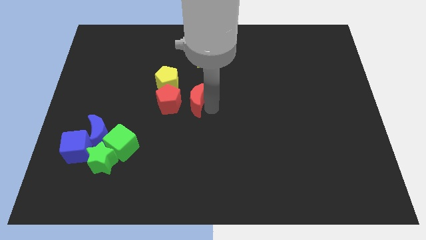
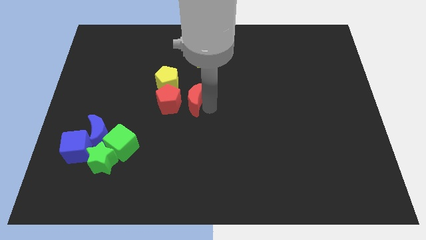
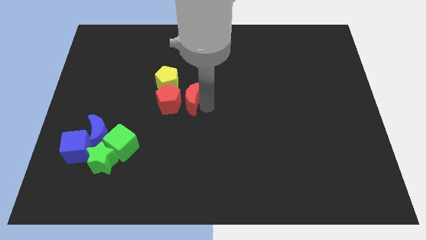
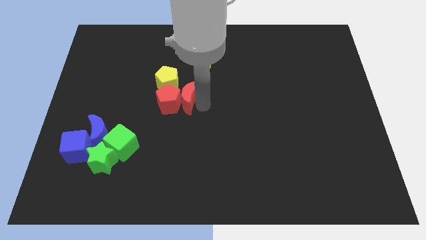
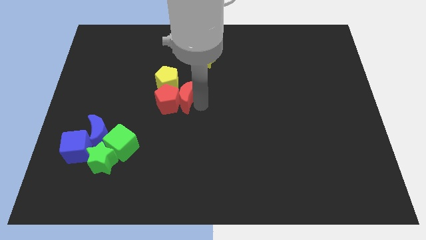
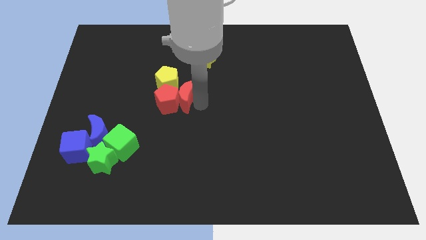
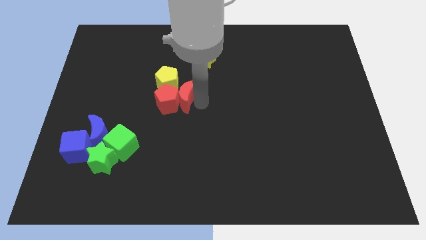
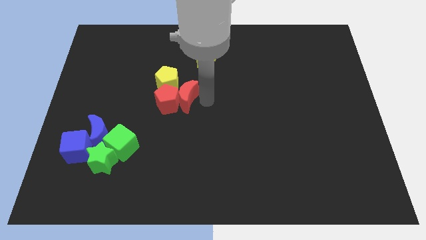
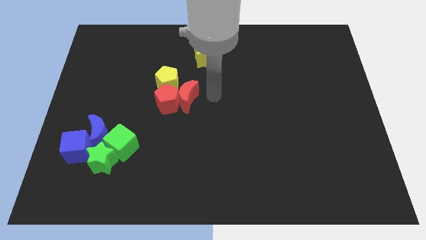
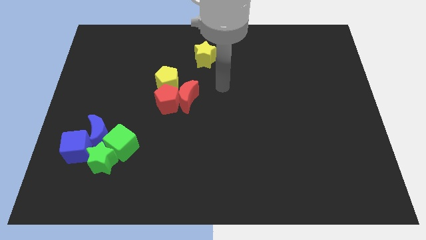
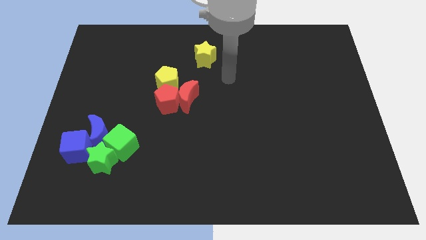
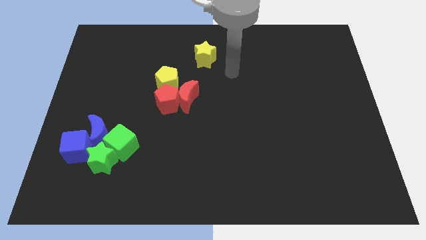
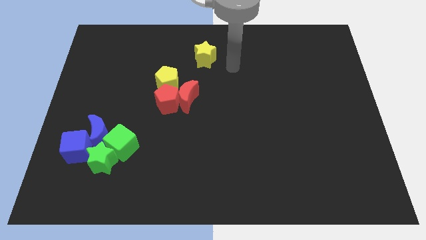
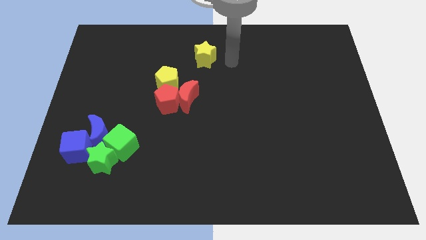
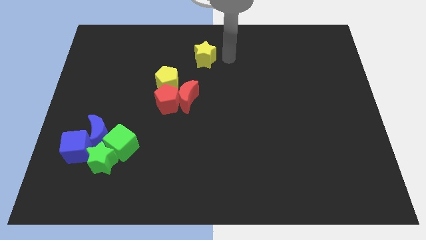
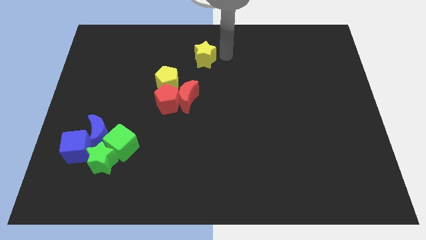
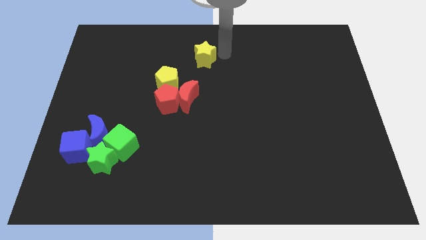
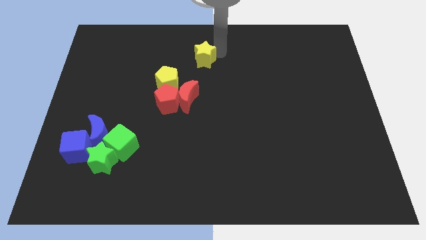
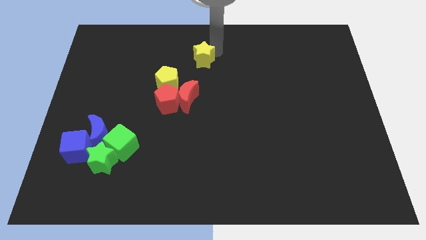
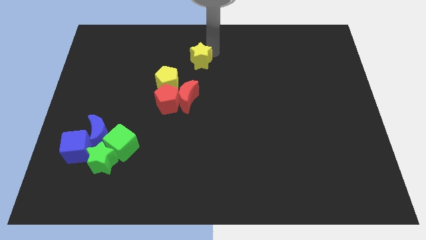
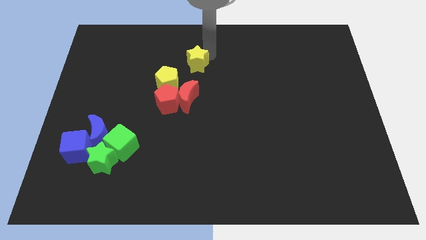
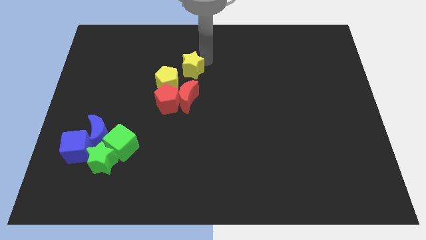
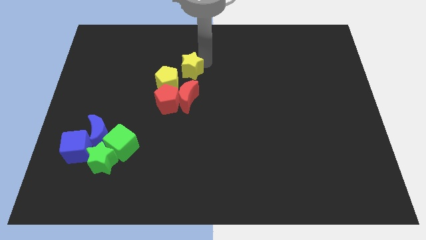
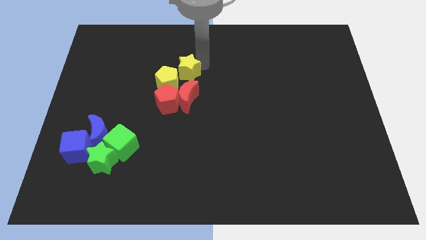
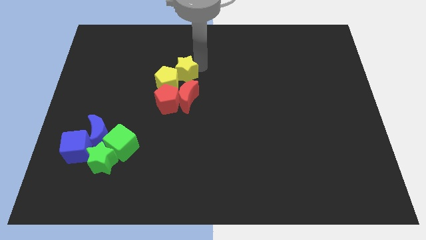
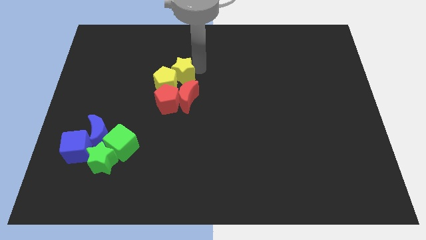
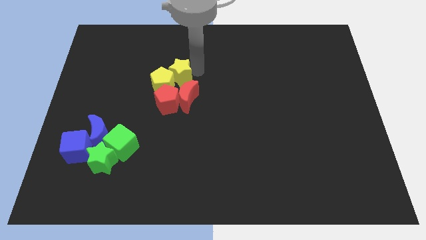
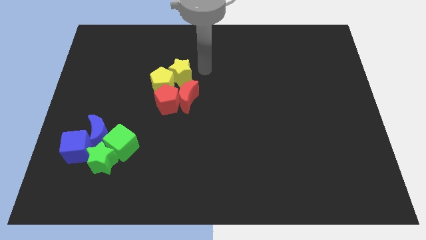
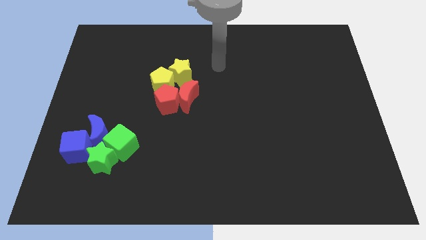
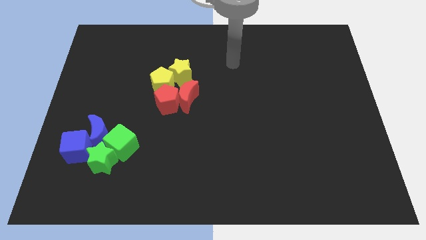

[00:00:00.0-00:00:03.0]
move the yellow star into yellow pentagon

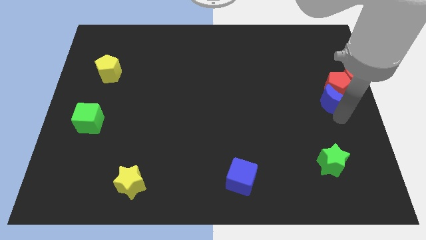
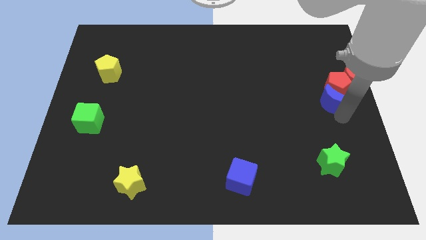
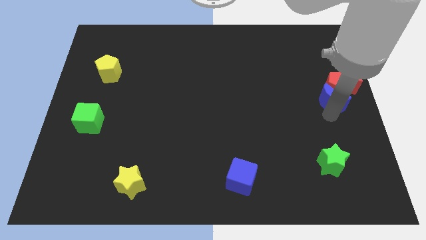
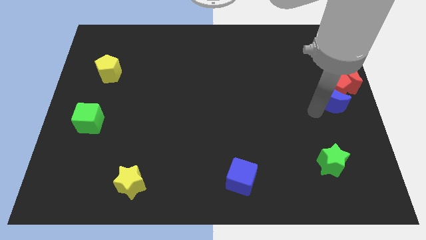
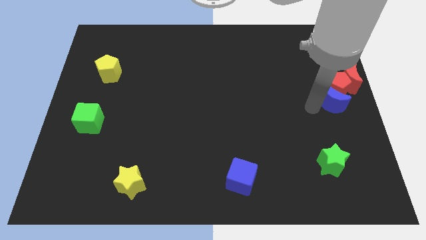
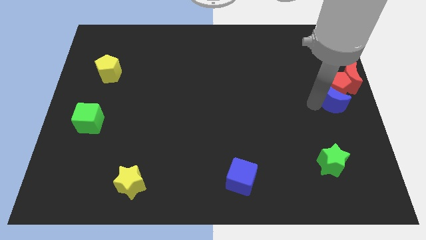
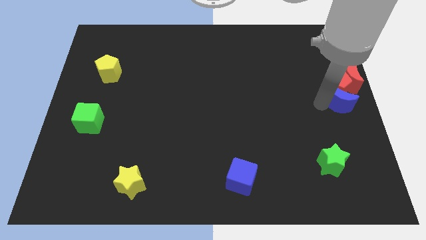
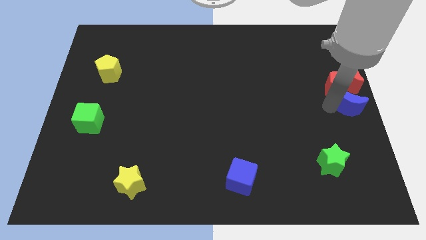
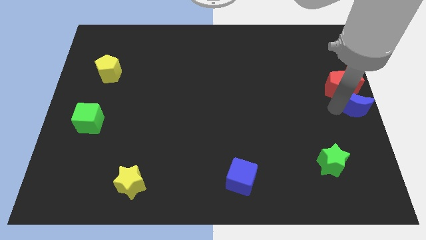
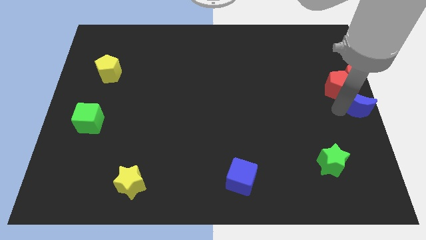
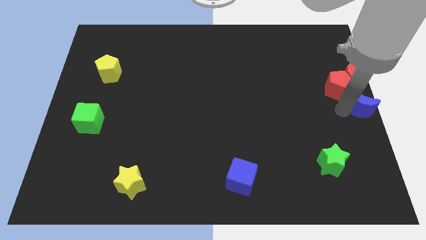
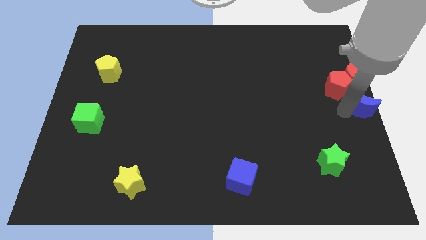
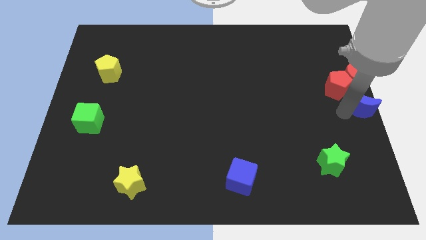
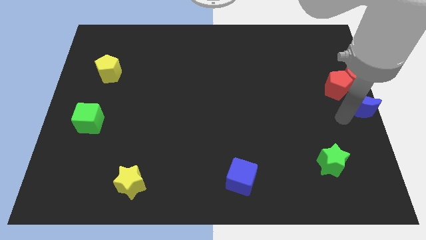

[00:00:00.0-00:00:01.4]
move the blue crescent to the bottom of the red crescent vertically

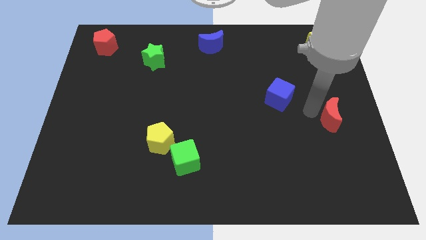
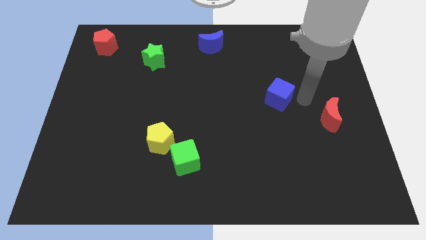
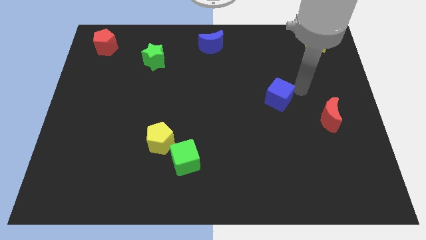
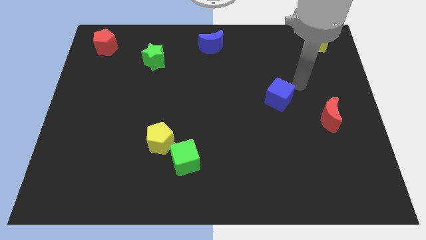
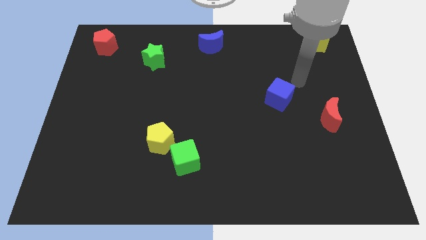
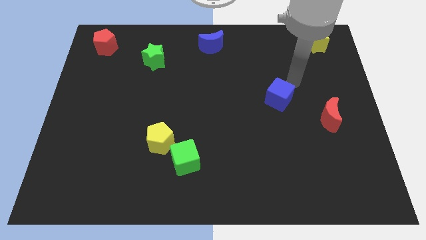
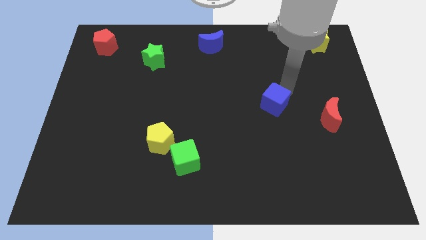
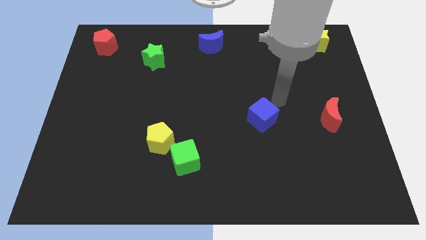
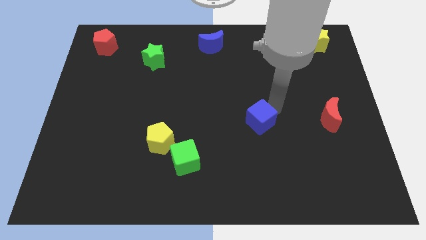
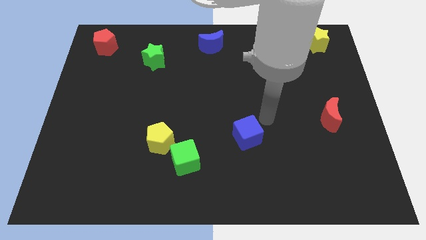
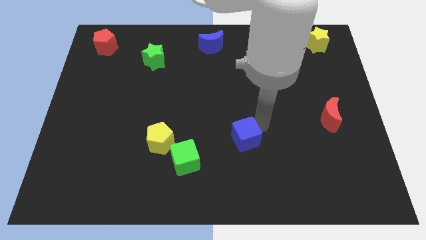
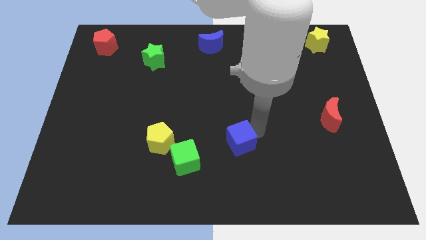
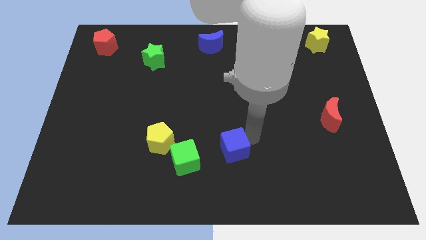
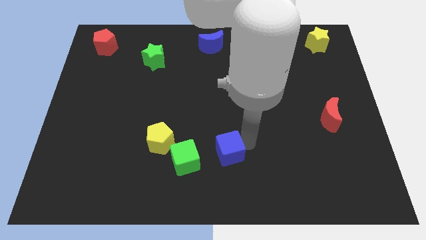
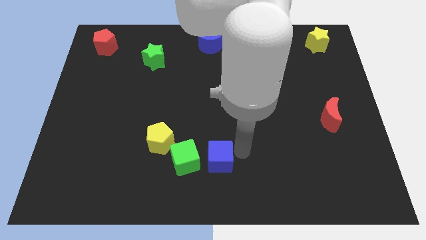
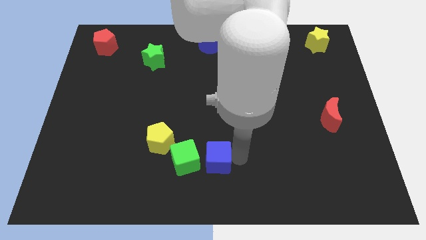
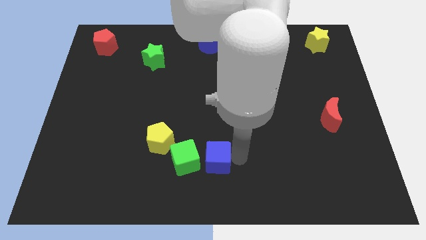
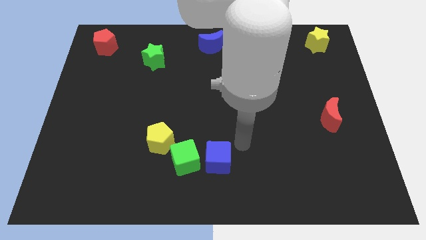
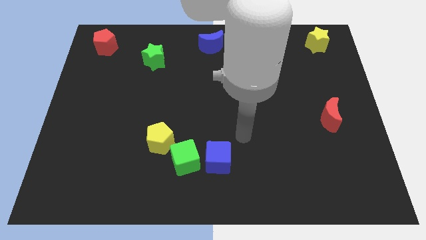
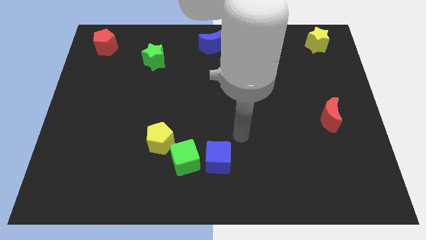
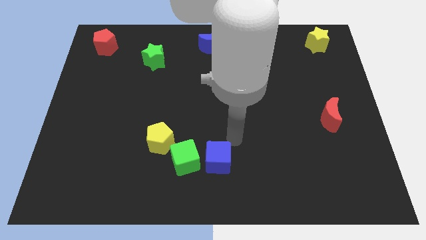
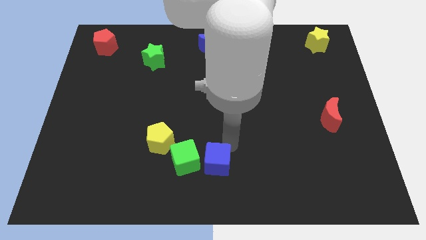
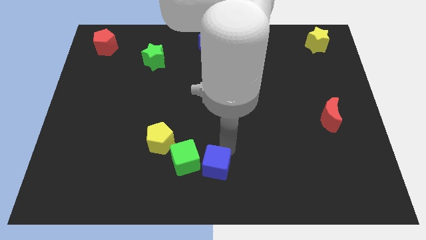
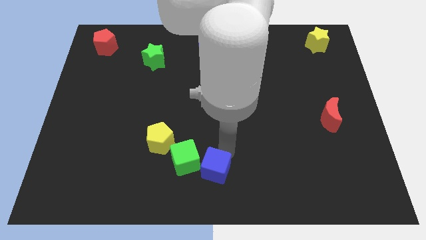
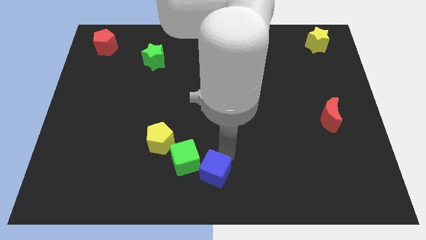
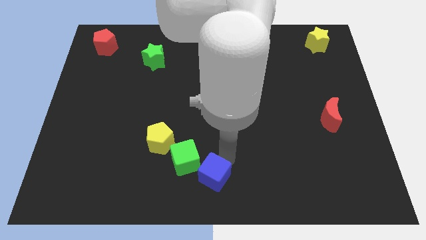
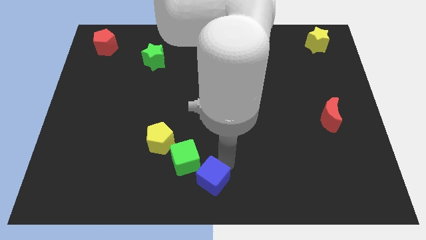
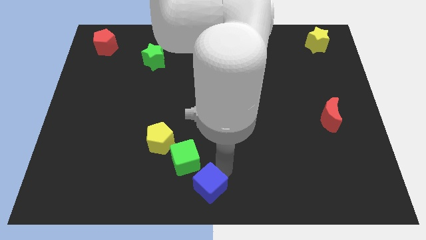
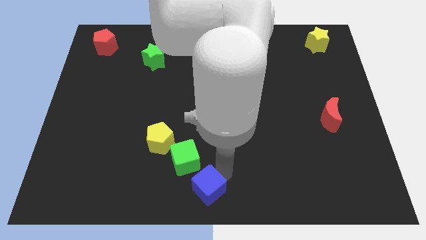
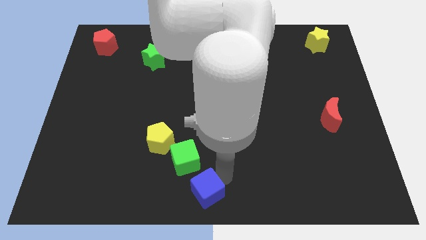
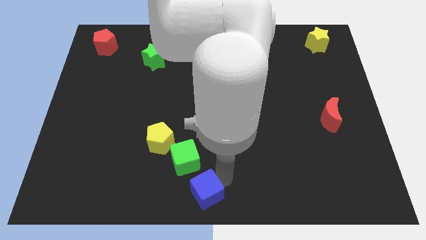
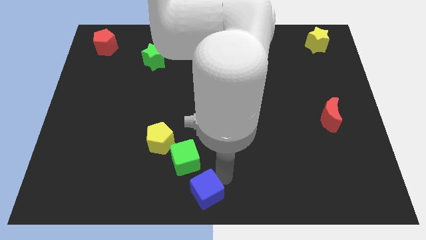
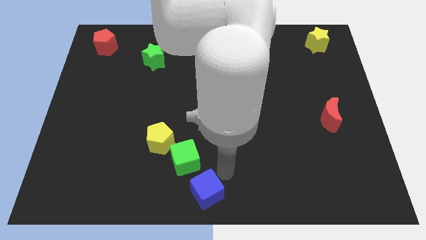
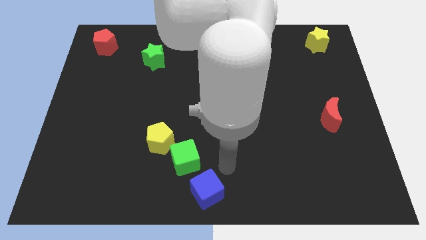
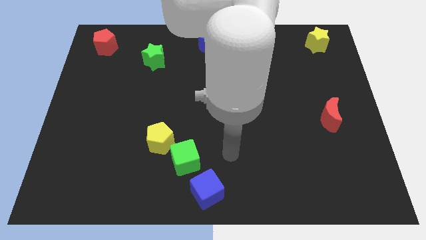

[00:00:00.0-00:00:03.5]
push the blue cube to the bottom center of the board

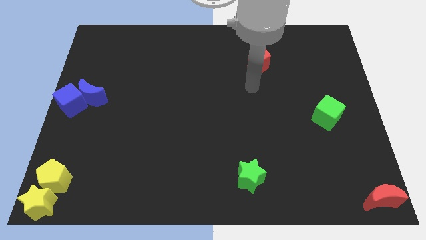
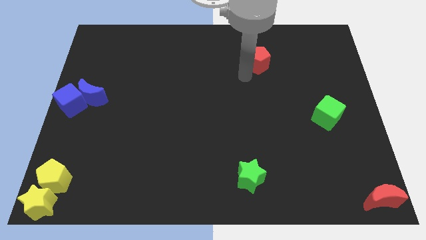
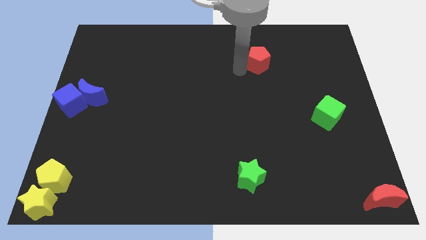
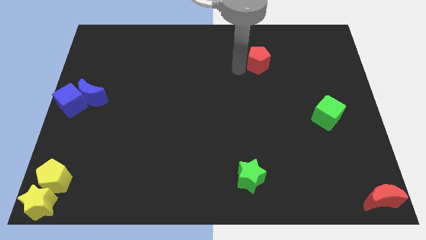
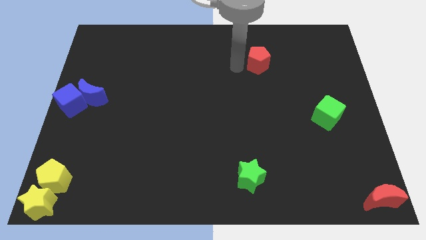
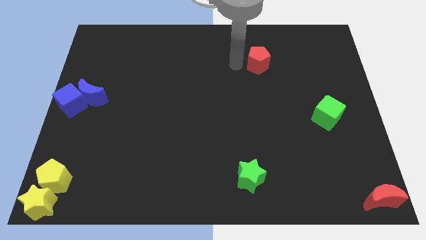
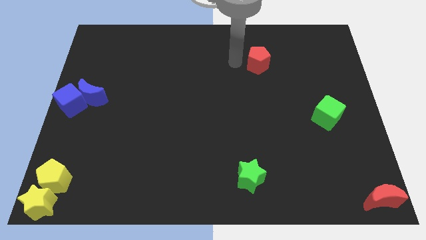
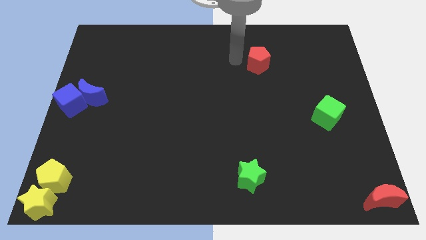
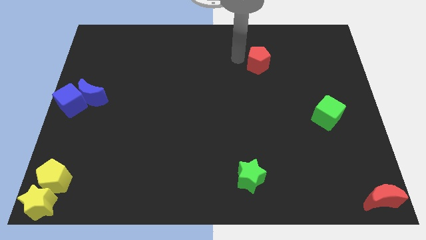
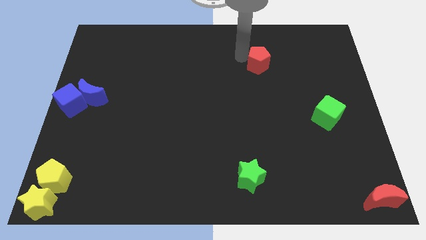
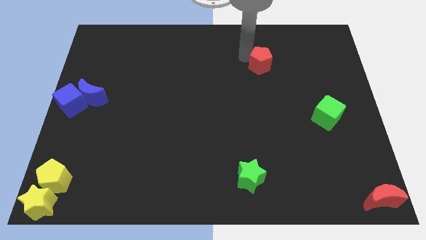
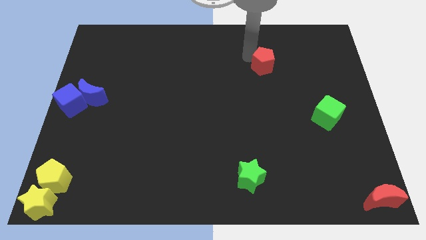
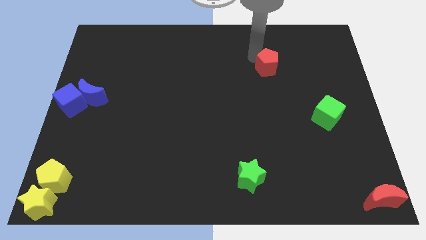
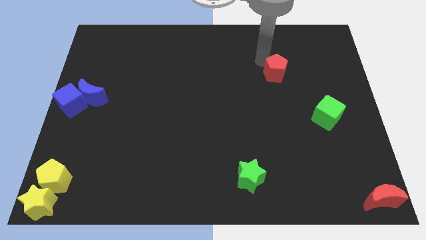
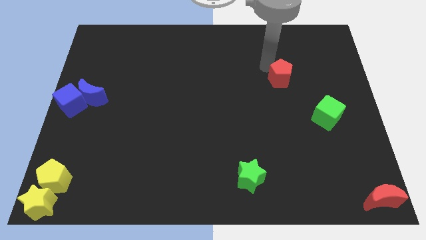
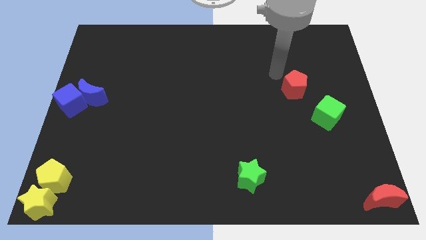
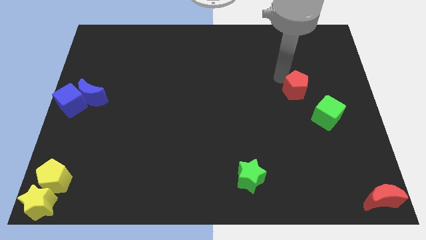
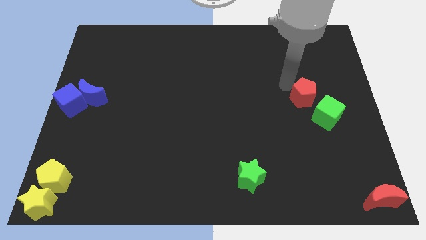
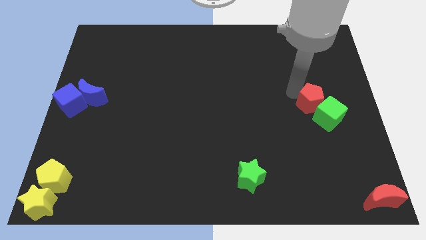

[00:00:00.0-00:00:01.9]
push the red pentagon into the green cube
